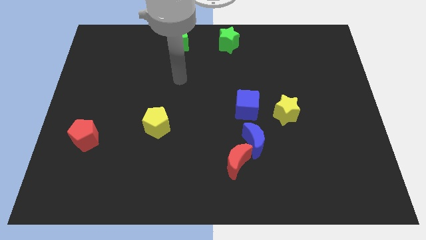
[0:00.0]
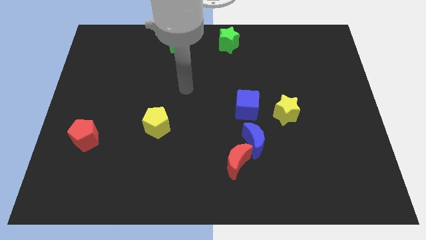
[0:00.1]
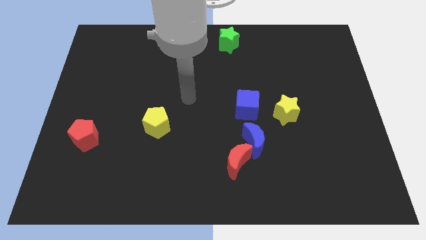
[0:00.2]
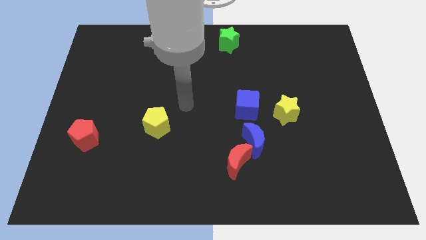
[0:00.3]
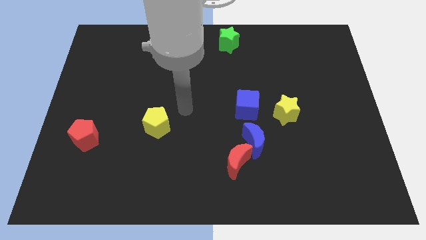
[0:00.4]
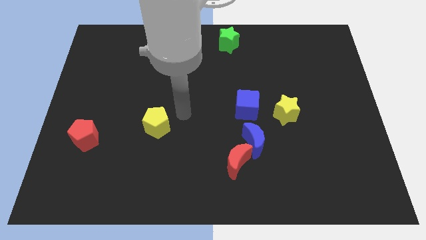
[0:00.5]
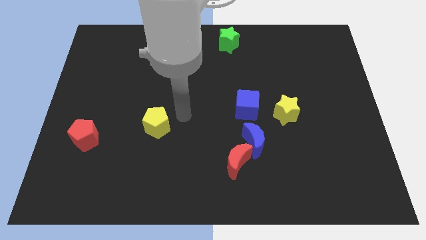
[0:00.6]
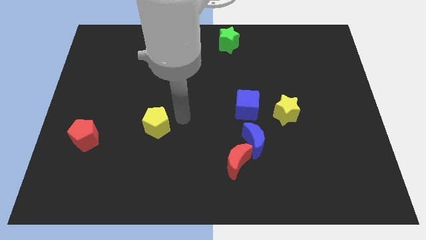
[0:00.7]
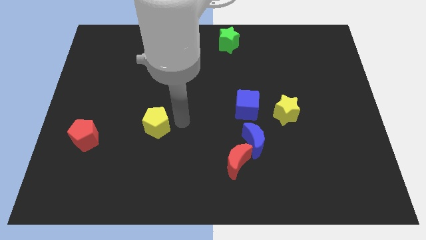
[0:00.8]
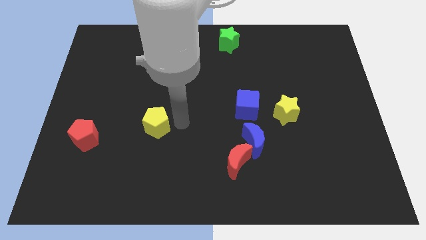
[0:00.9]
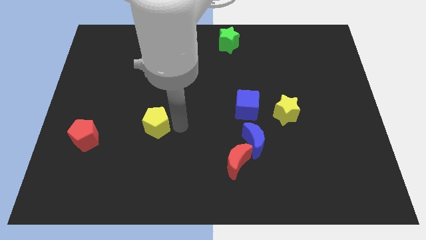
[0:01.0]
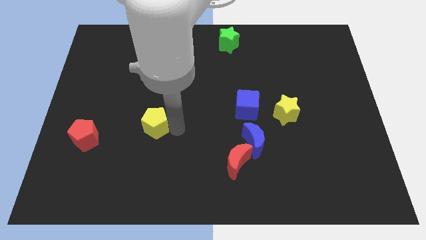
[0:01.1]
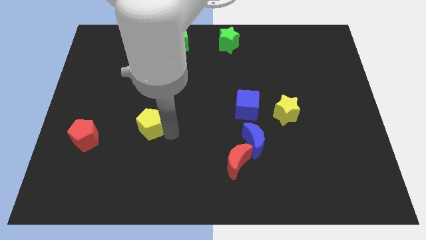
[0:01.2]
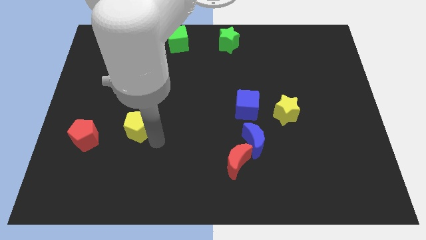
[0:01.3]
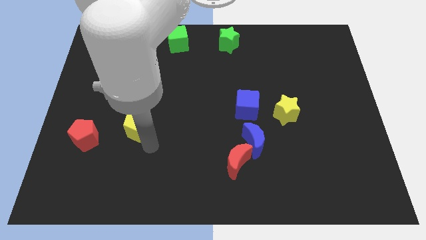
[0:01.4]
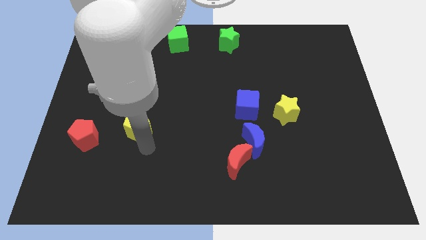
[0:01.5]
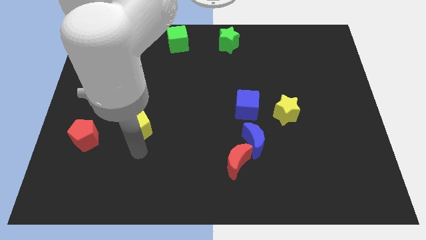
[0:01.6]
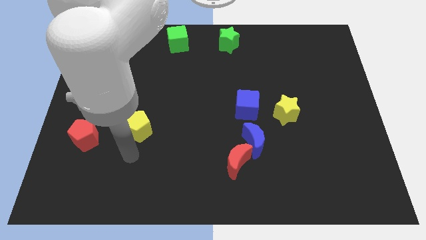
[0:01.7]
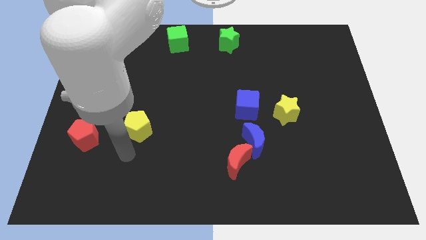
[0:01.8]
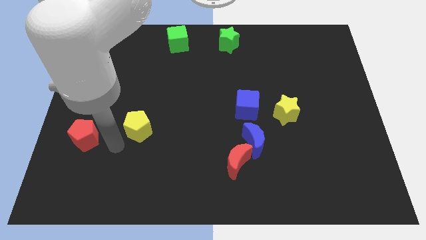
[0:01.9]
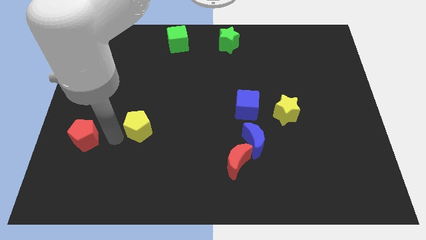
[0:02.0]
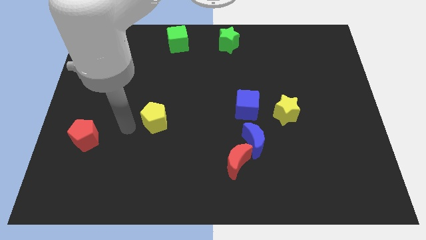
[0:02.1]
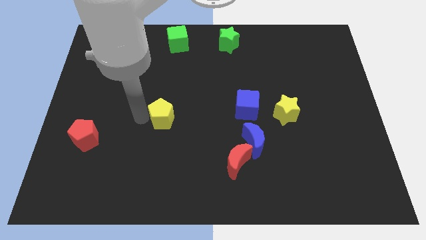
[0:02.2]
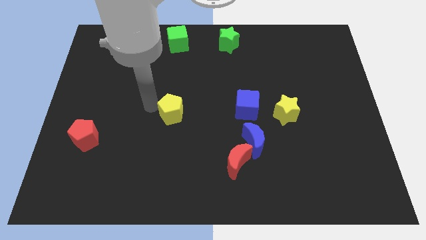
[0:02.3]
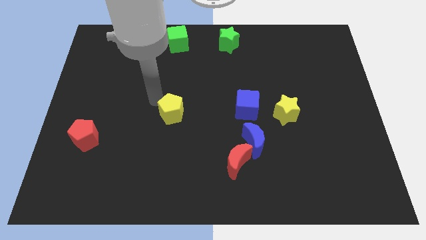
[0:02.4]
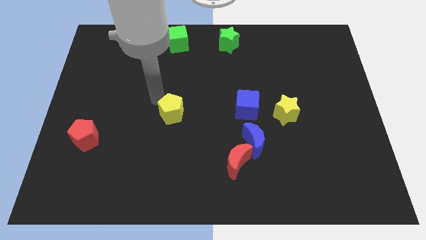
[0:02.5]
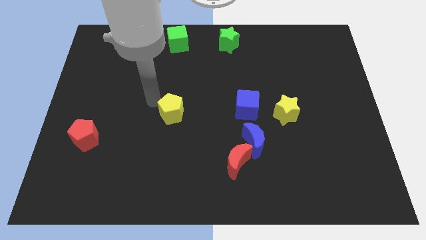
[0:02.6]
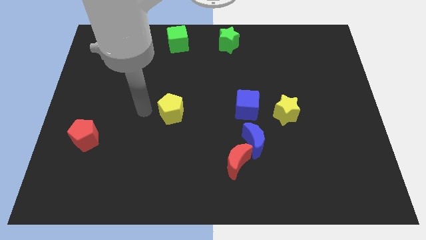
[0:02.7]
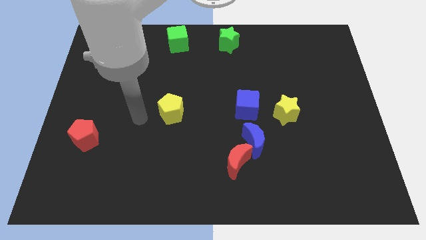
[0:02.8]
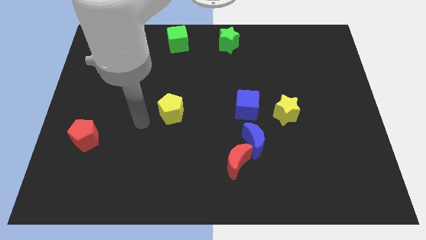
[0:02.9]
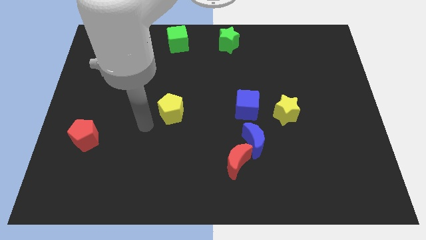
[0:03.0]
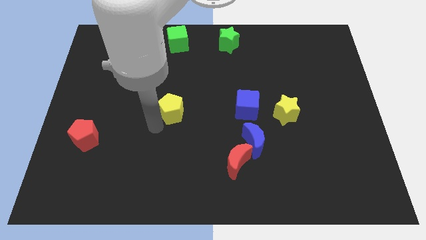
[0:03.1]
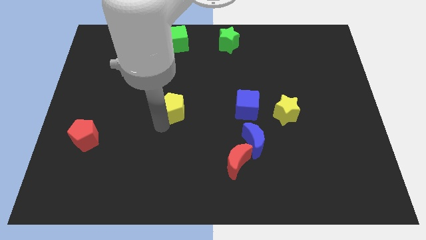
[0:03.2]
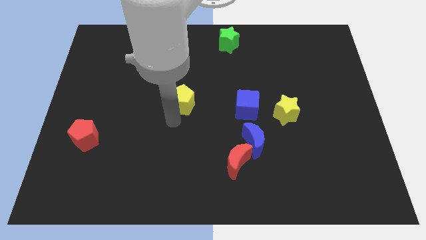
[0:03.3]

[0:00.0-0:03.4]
move the yellow pentagon to the left side of the blue cube

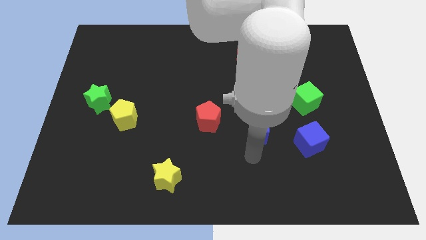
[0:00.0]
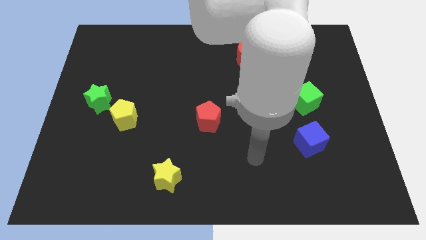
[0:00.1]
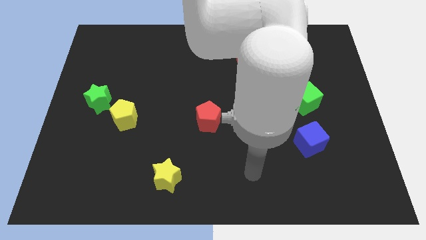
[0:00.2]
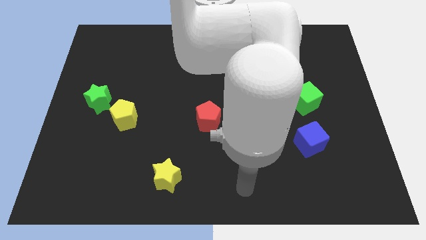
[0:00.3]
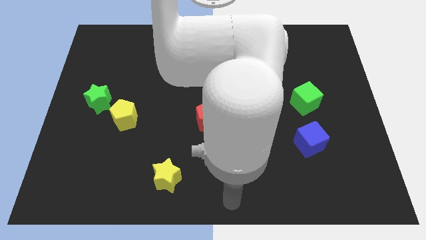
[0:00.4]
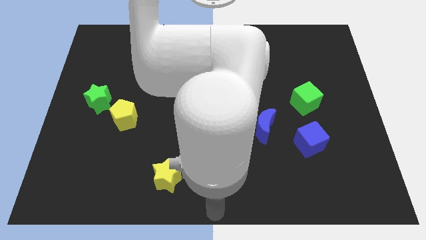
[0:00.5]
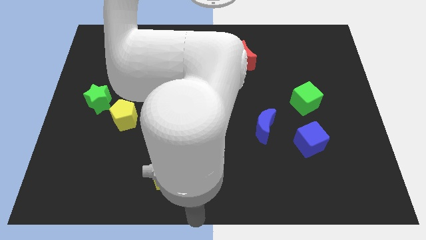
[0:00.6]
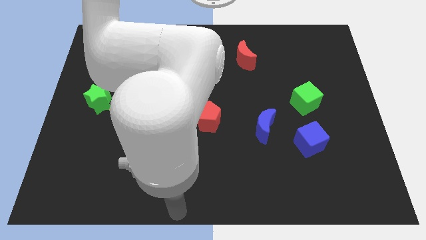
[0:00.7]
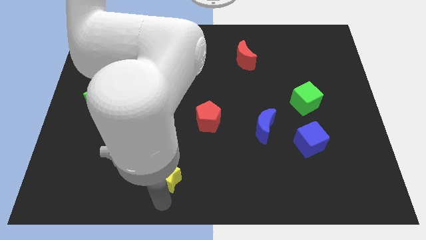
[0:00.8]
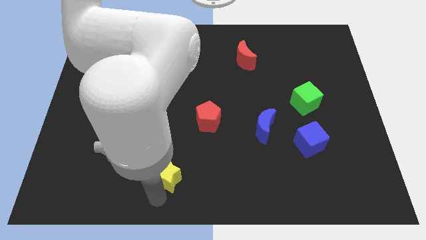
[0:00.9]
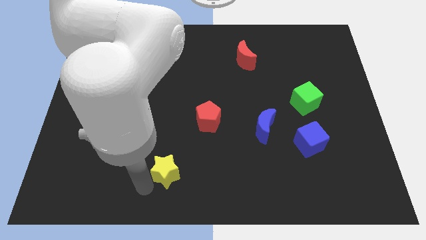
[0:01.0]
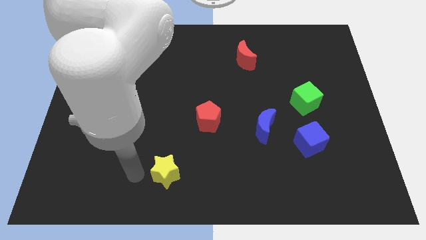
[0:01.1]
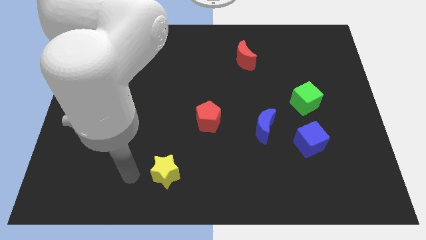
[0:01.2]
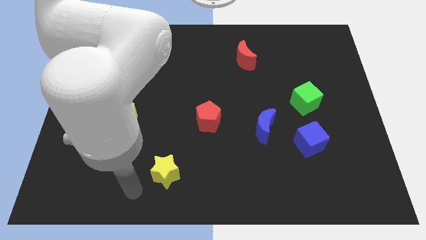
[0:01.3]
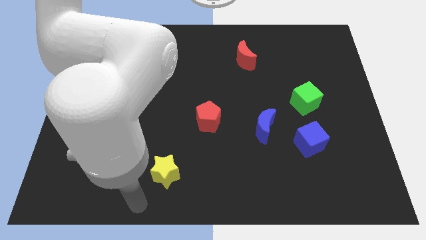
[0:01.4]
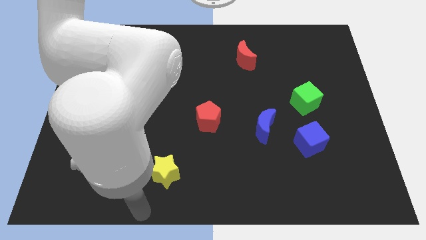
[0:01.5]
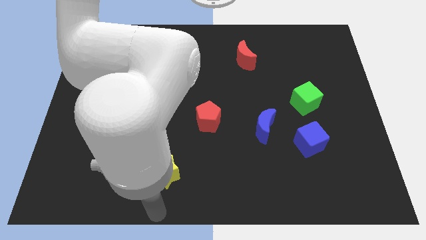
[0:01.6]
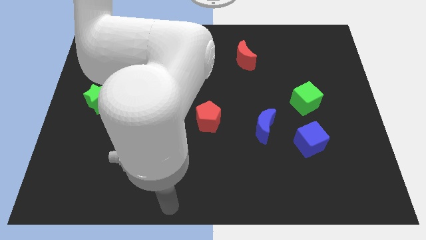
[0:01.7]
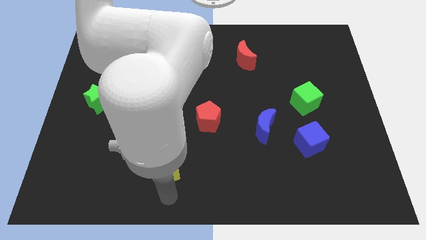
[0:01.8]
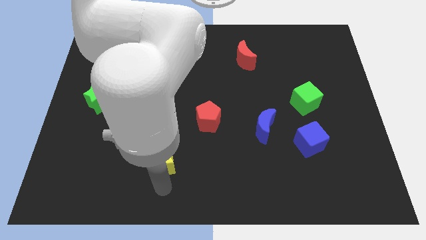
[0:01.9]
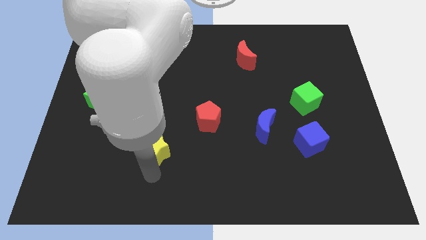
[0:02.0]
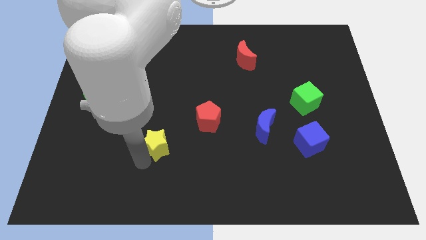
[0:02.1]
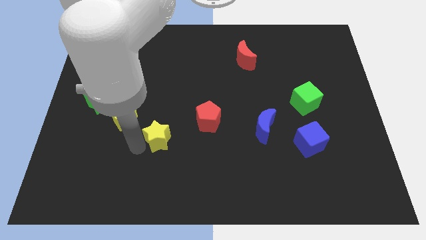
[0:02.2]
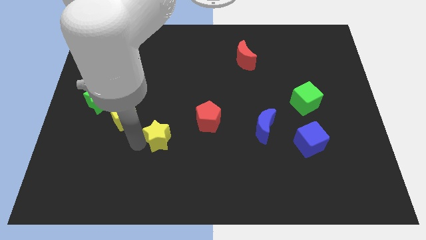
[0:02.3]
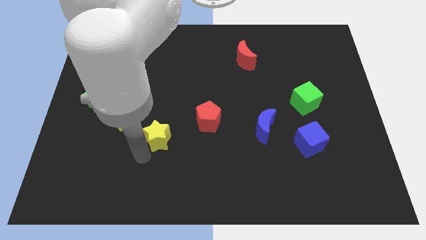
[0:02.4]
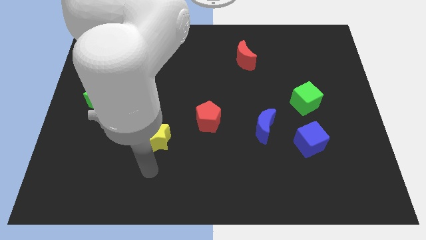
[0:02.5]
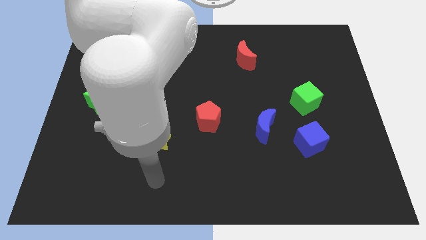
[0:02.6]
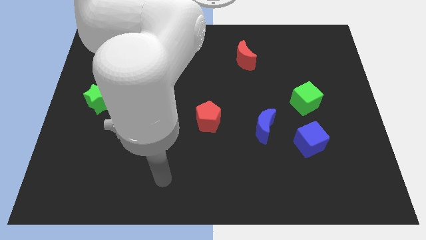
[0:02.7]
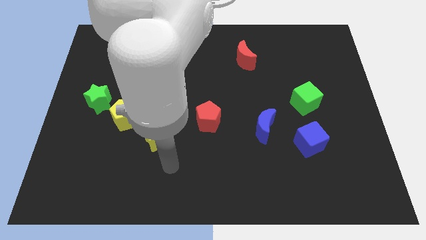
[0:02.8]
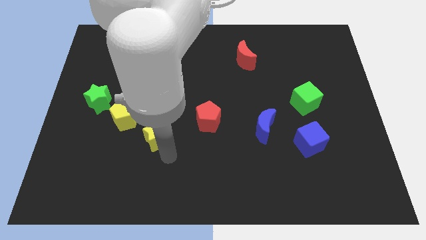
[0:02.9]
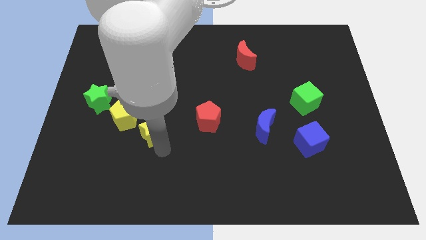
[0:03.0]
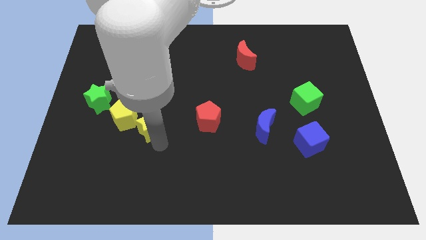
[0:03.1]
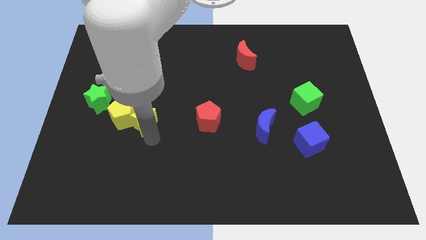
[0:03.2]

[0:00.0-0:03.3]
push the yellow star into the yellow pentagon

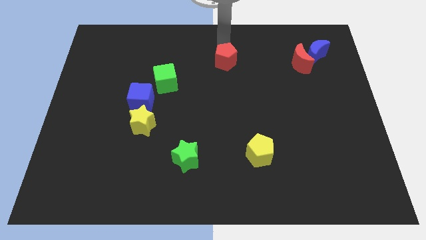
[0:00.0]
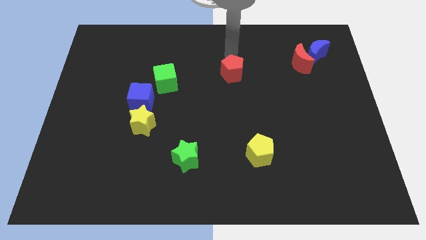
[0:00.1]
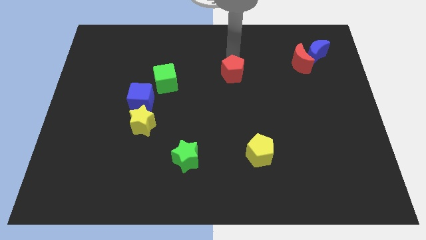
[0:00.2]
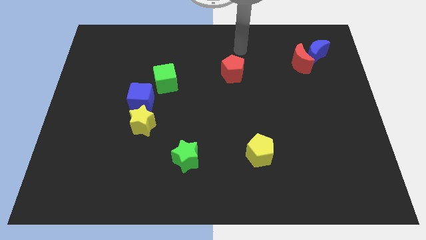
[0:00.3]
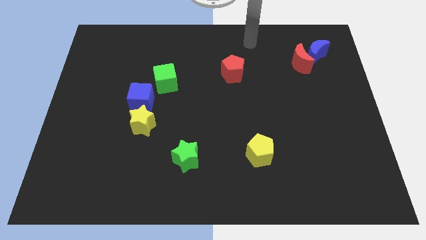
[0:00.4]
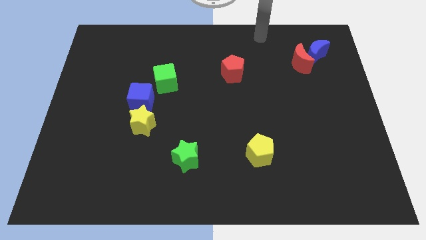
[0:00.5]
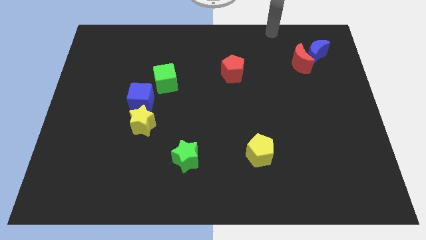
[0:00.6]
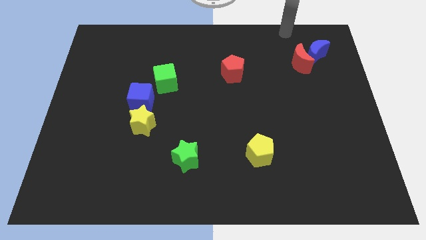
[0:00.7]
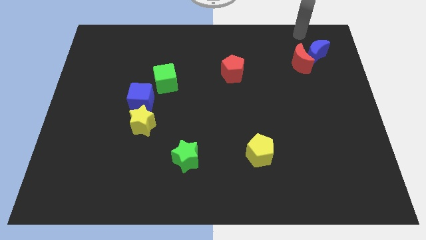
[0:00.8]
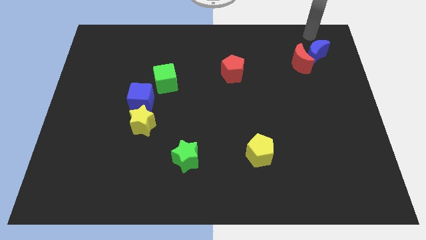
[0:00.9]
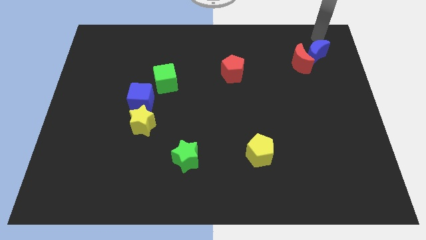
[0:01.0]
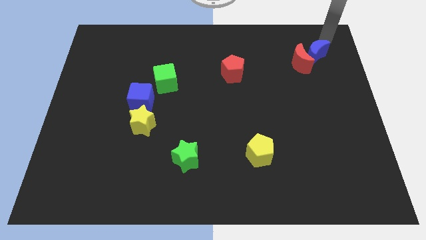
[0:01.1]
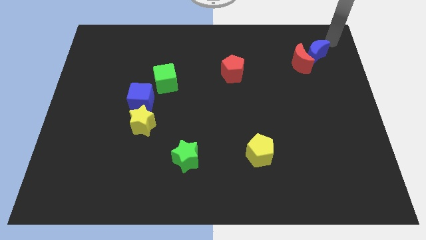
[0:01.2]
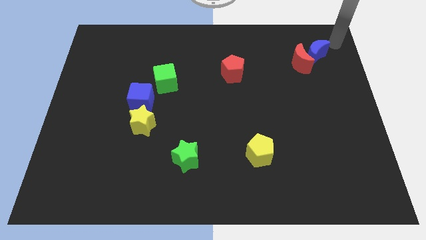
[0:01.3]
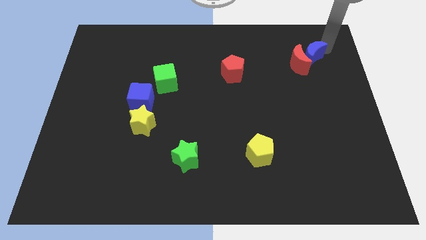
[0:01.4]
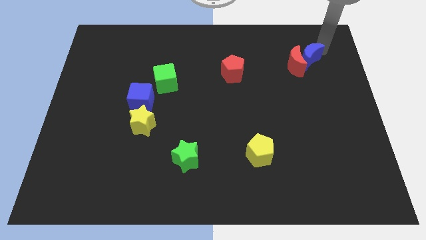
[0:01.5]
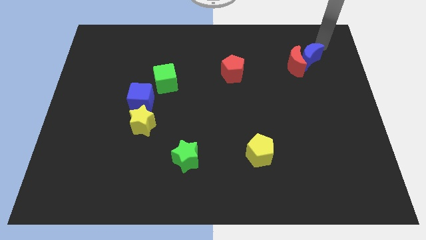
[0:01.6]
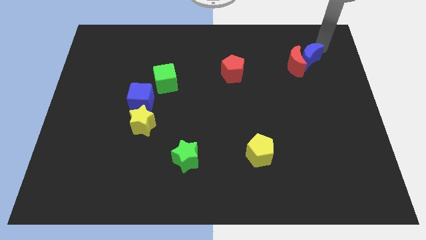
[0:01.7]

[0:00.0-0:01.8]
point your arm above blue cube

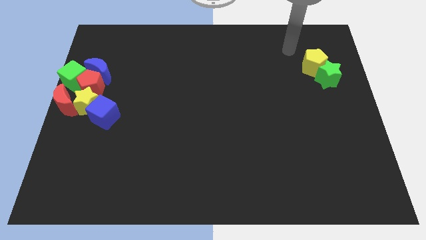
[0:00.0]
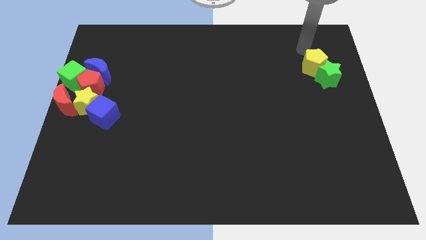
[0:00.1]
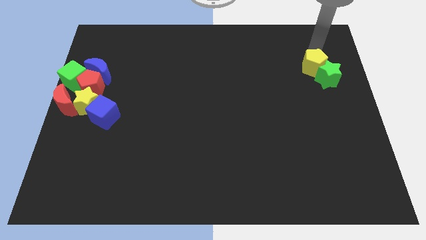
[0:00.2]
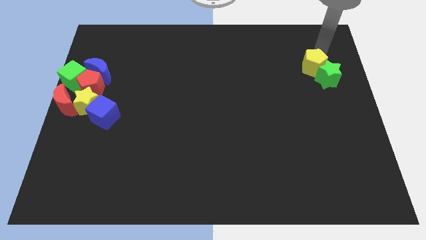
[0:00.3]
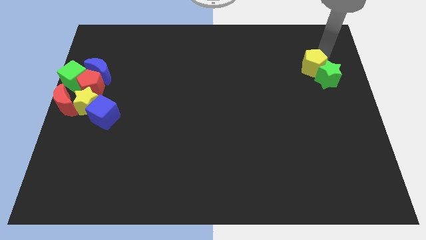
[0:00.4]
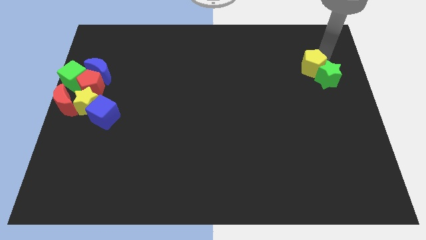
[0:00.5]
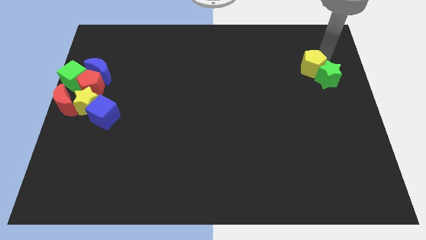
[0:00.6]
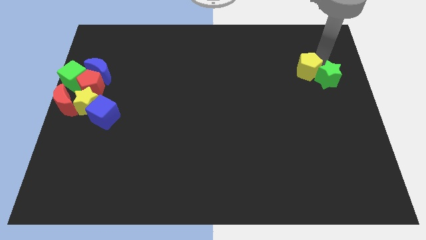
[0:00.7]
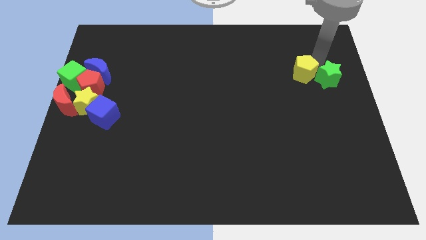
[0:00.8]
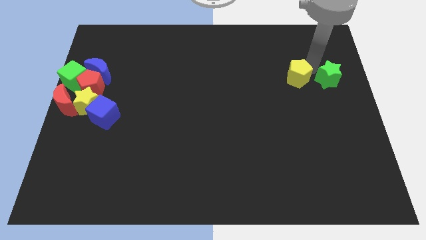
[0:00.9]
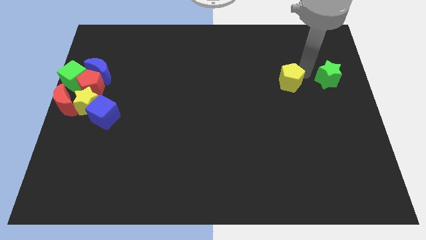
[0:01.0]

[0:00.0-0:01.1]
move the yellow pentagon to the left of the green star
